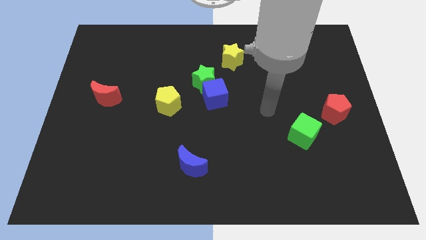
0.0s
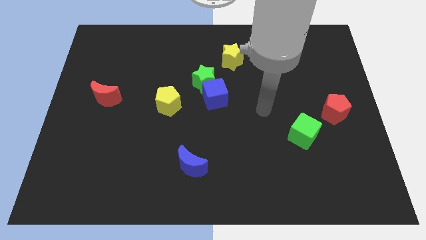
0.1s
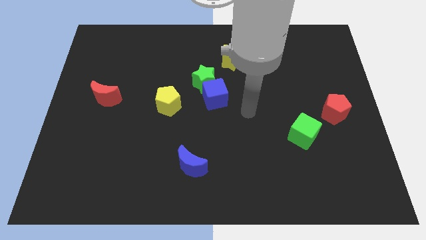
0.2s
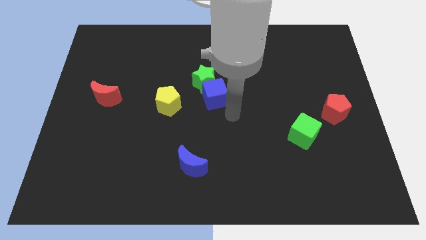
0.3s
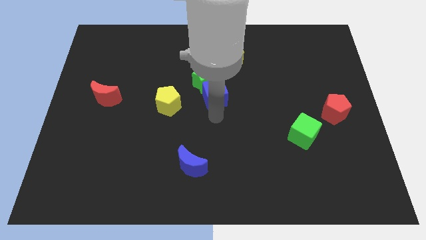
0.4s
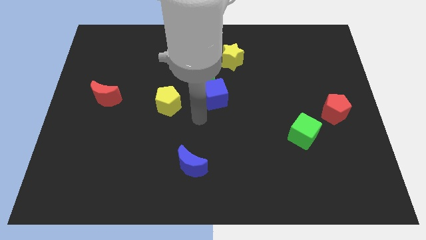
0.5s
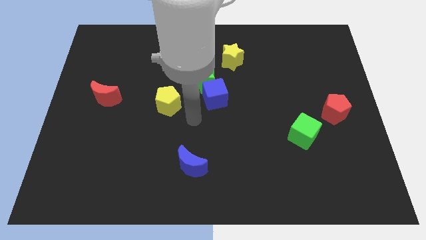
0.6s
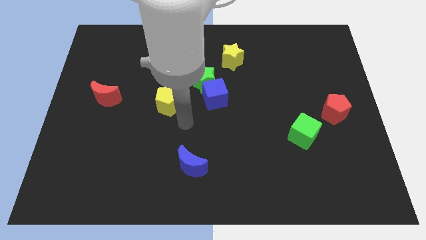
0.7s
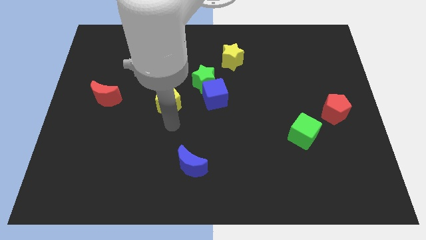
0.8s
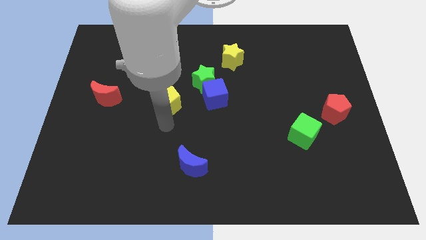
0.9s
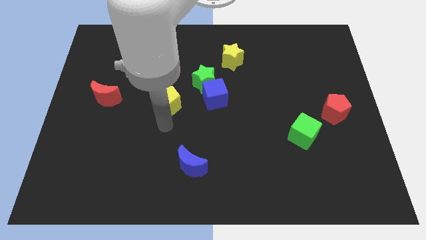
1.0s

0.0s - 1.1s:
move arm below the yellow pentagon

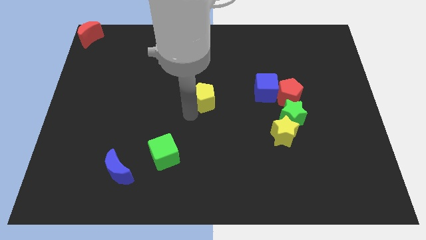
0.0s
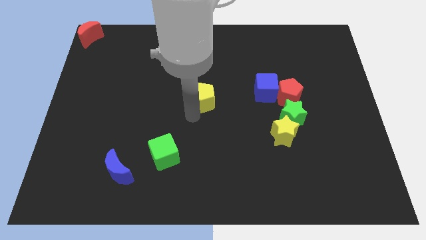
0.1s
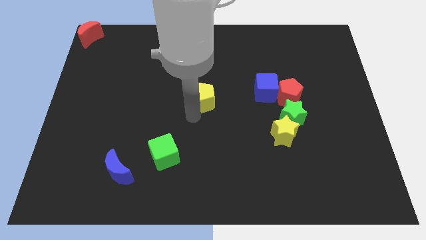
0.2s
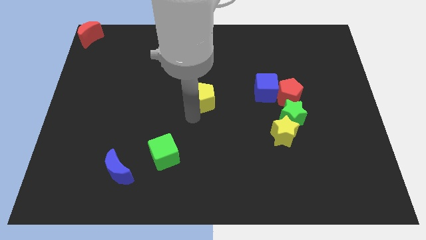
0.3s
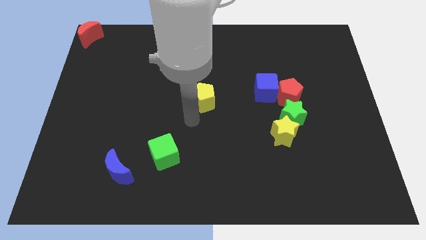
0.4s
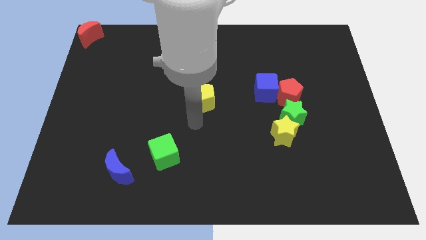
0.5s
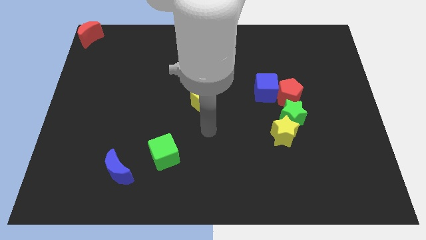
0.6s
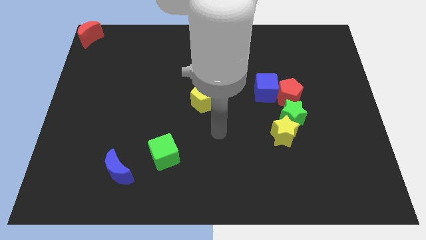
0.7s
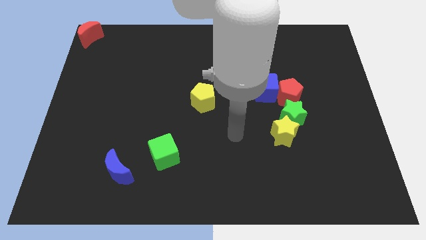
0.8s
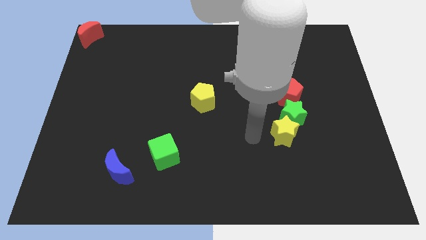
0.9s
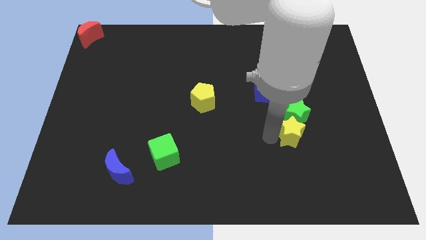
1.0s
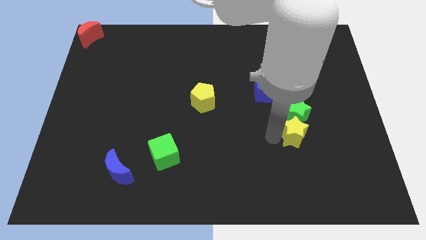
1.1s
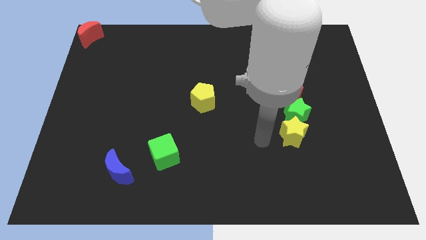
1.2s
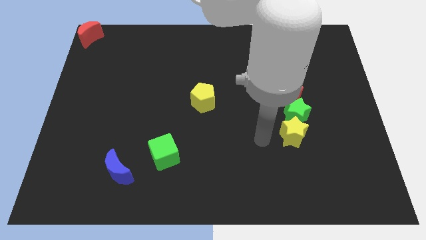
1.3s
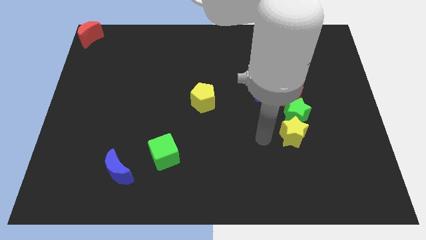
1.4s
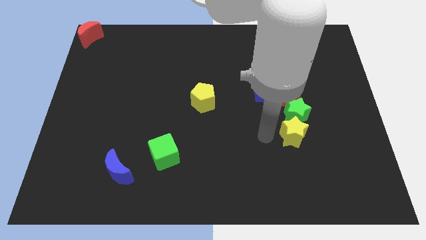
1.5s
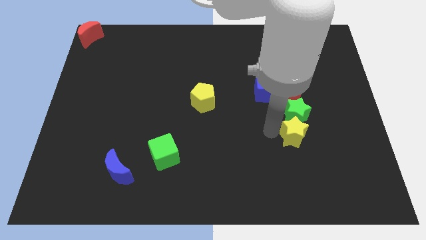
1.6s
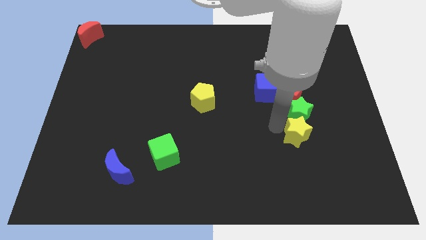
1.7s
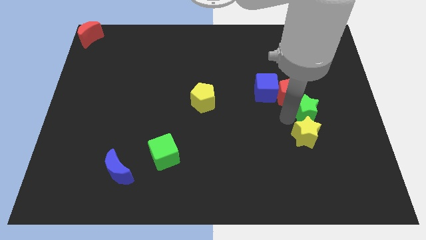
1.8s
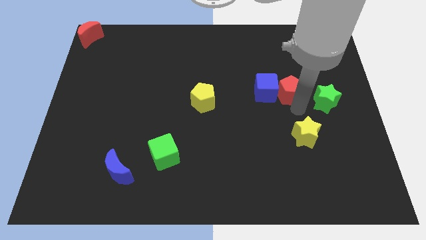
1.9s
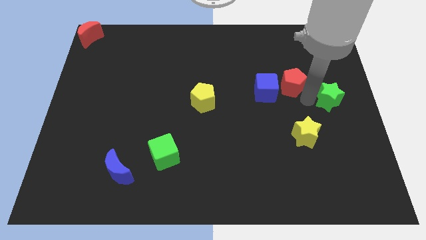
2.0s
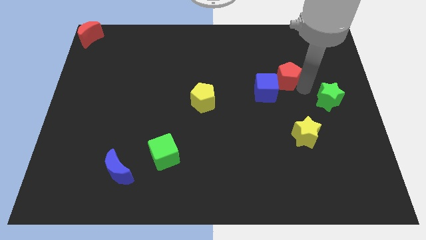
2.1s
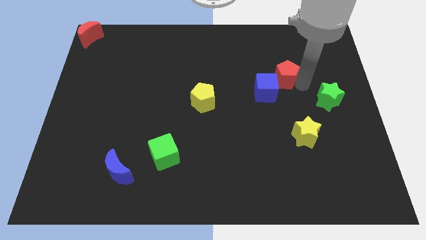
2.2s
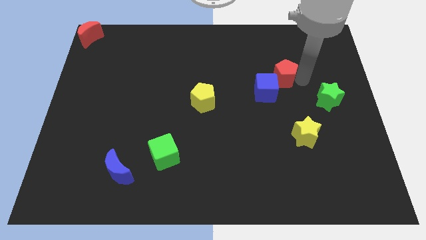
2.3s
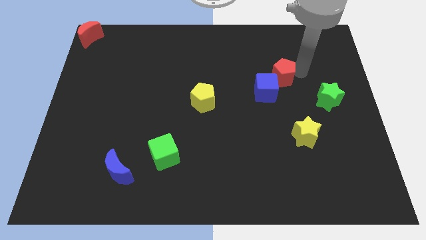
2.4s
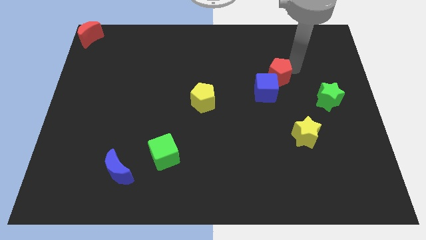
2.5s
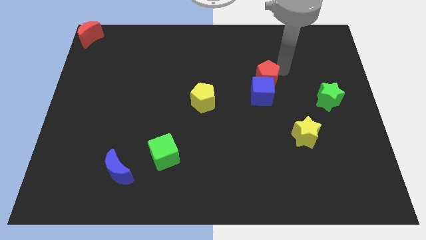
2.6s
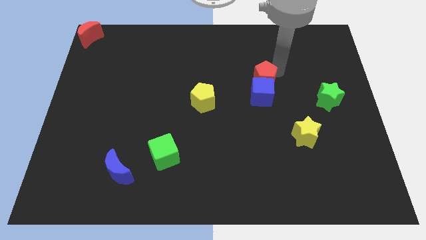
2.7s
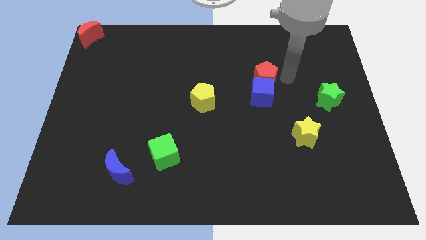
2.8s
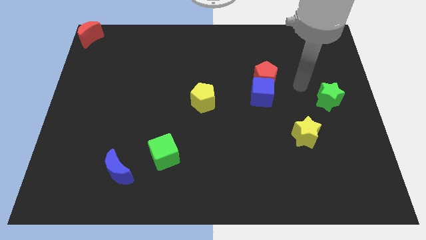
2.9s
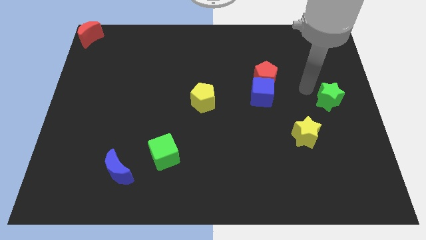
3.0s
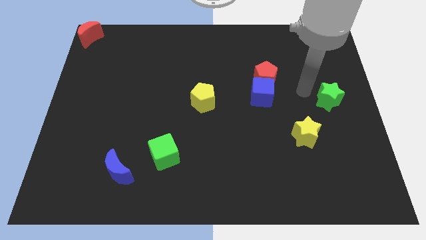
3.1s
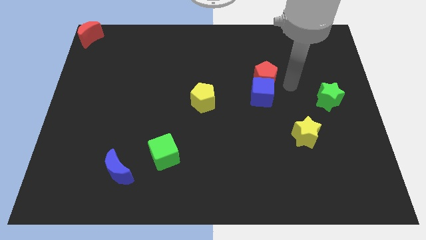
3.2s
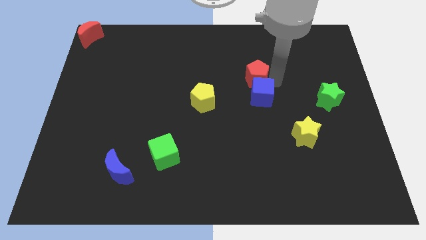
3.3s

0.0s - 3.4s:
place the red pentagon above the blue cube

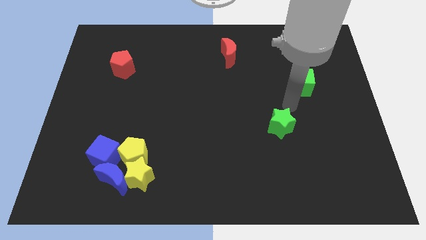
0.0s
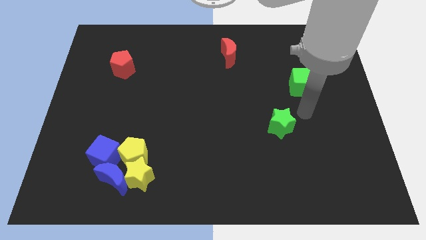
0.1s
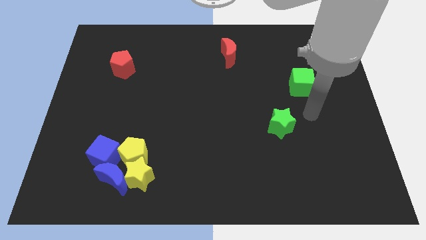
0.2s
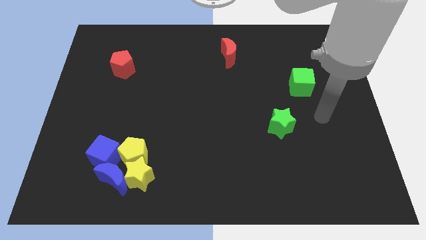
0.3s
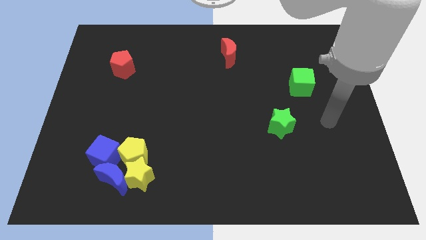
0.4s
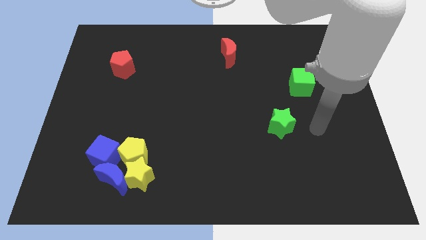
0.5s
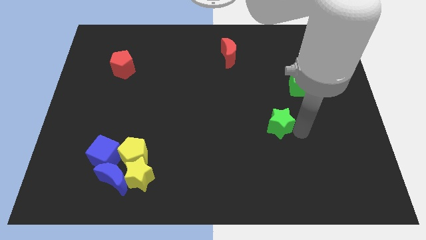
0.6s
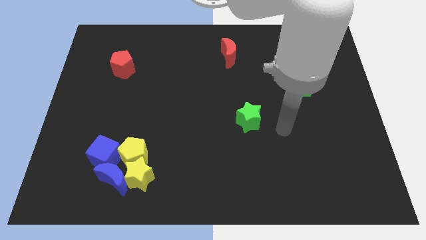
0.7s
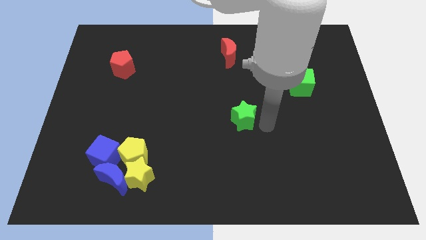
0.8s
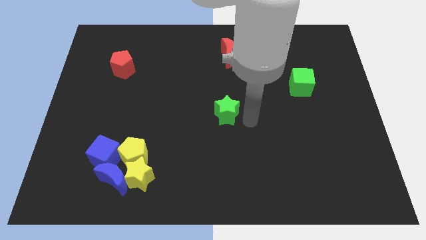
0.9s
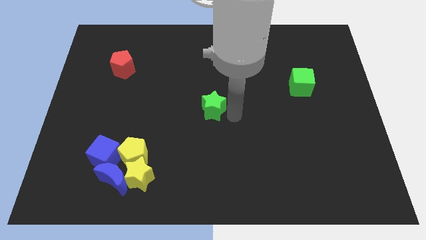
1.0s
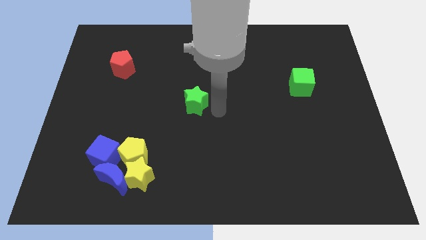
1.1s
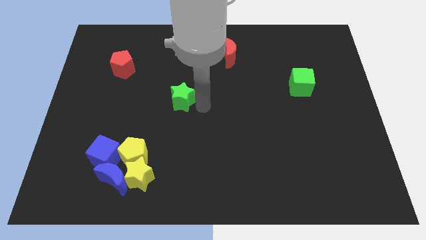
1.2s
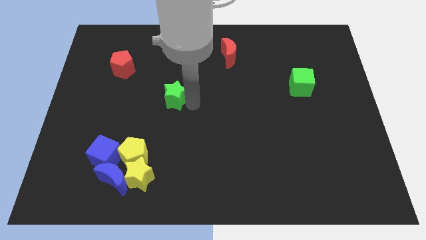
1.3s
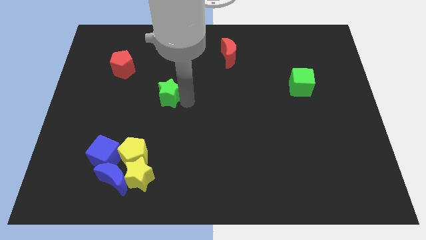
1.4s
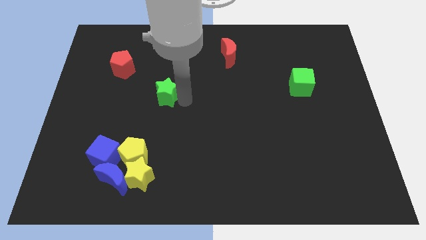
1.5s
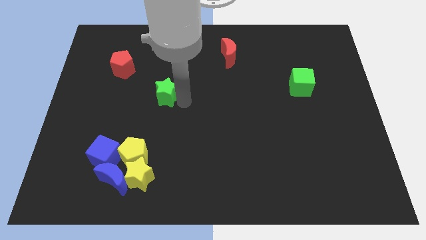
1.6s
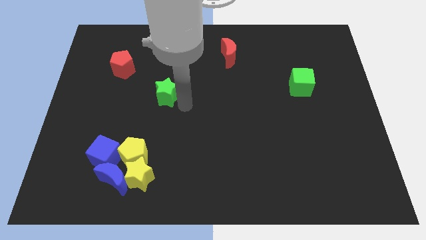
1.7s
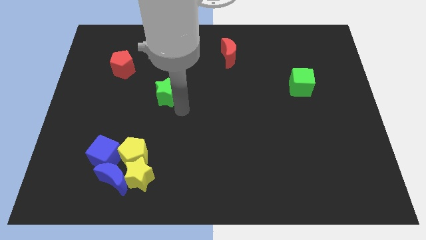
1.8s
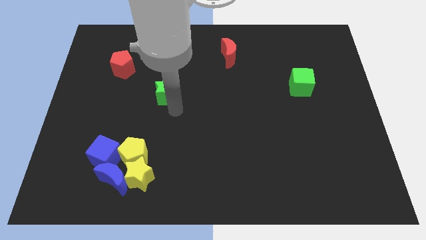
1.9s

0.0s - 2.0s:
move the green star to the bottom right of the red pentagon

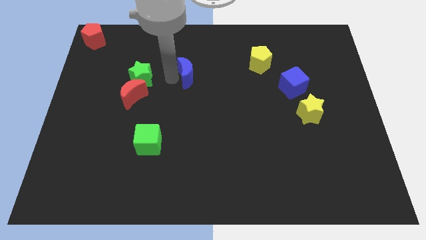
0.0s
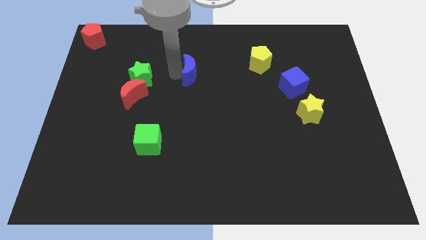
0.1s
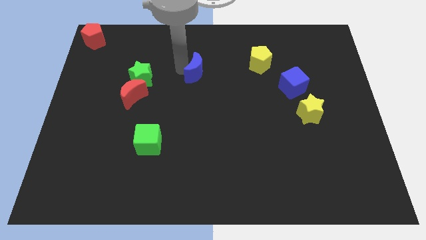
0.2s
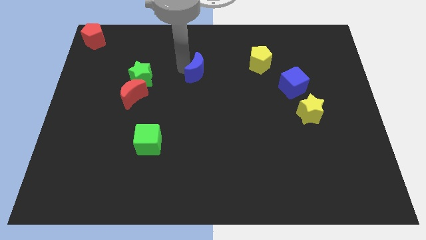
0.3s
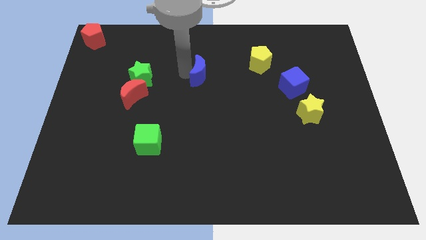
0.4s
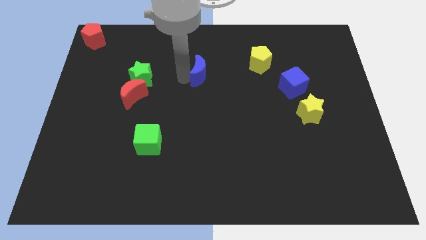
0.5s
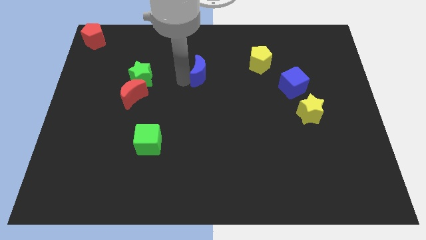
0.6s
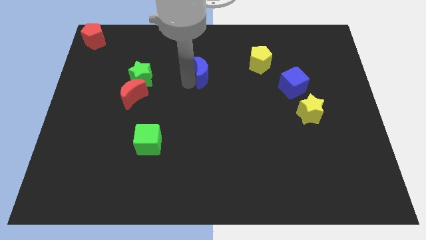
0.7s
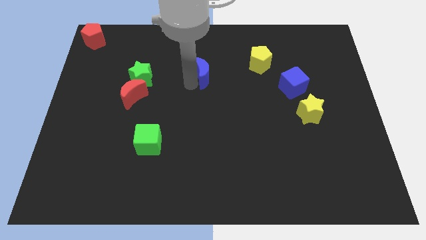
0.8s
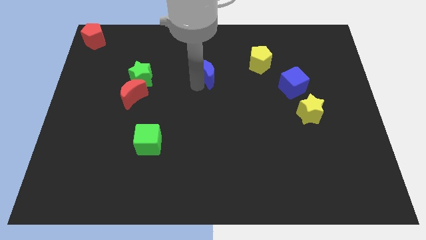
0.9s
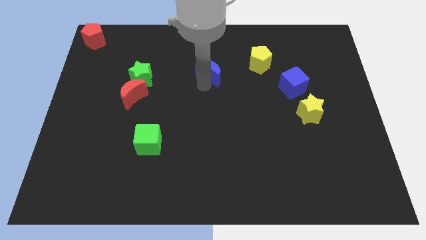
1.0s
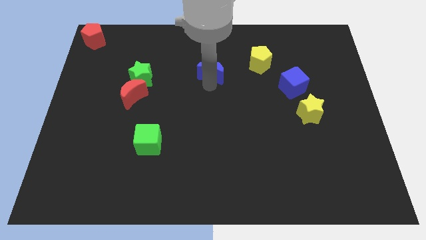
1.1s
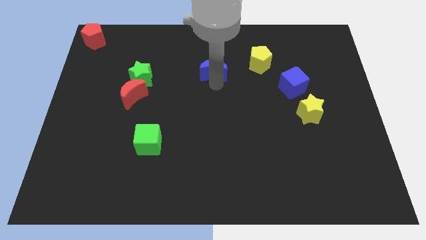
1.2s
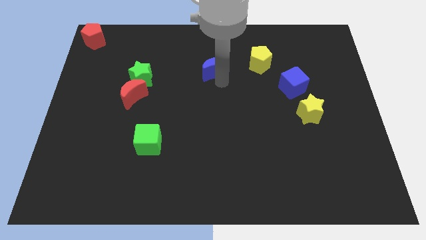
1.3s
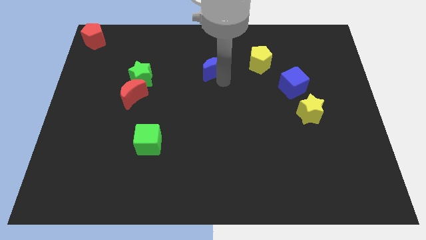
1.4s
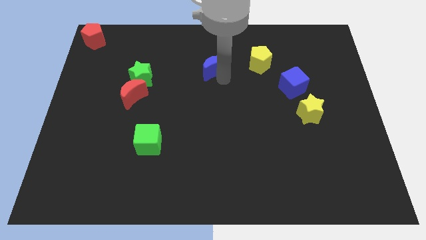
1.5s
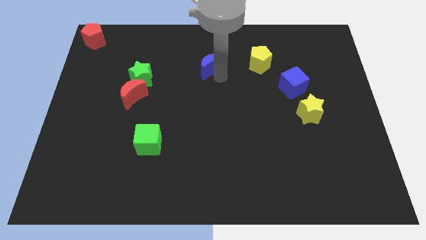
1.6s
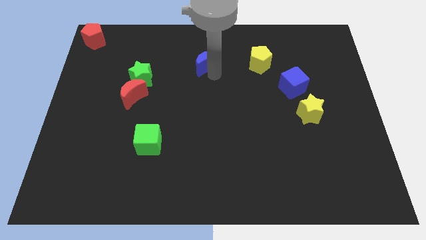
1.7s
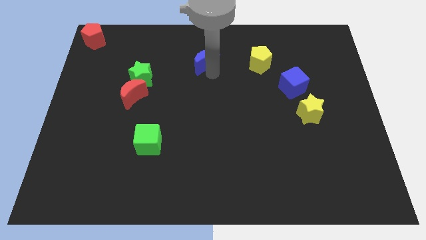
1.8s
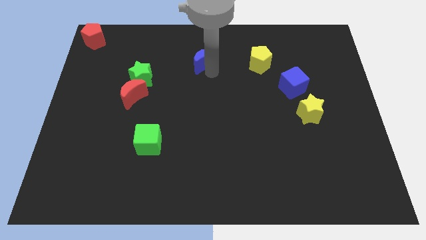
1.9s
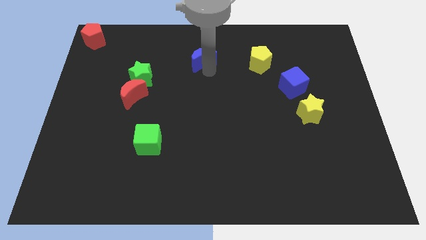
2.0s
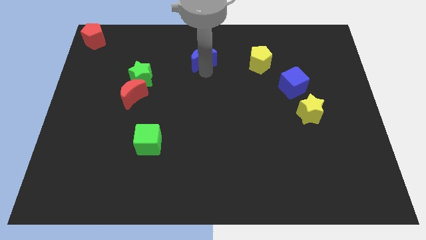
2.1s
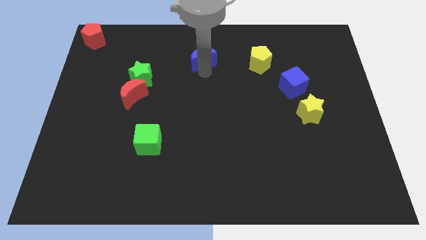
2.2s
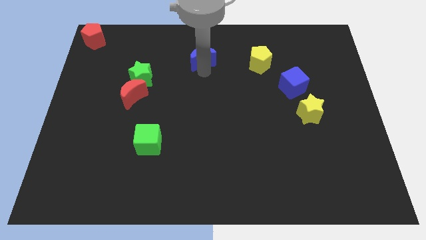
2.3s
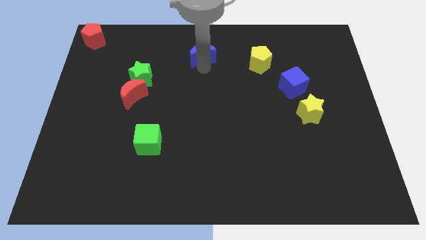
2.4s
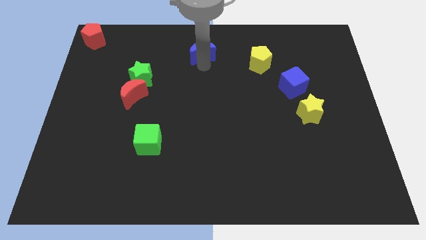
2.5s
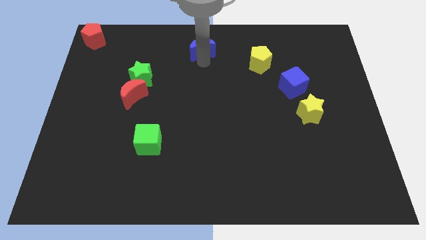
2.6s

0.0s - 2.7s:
place blue cube towards the top middle corner of the board
